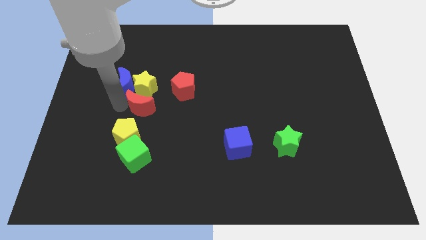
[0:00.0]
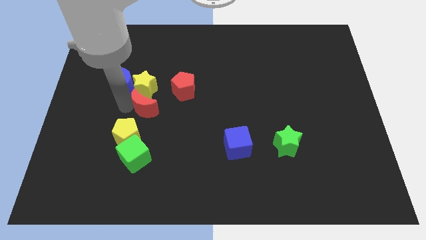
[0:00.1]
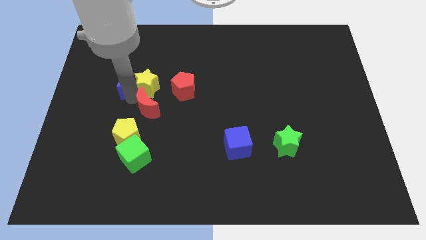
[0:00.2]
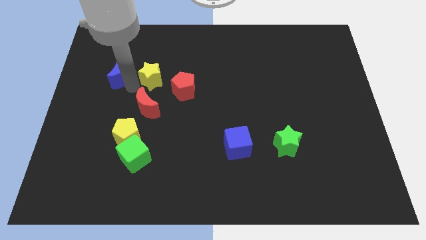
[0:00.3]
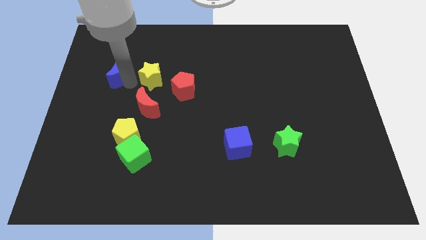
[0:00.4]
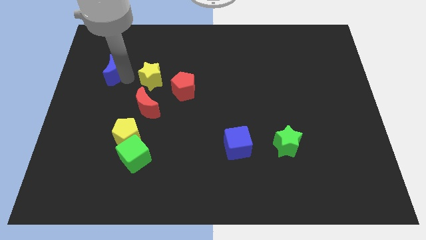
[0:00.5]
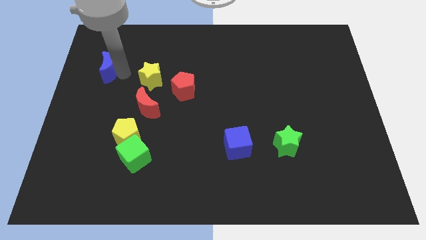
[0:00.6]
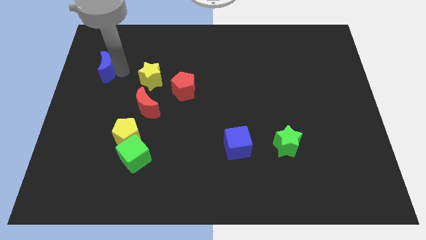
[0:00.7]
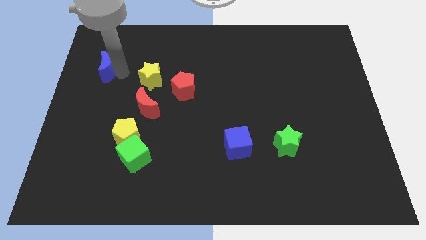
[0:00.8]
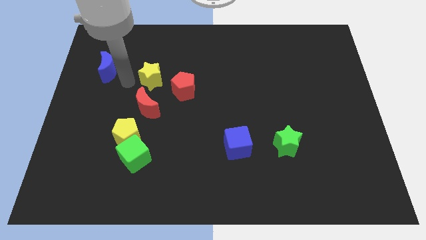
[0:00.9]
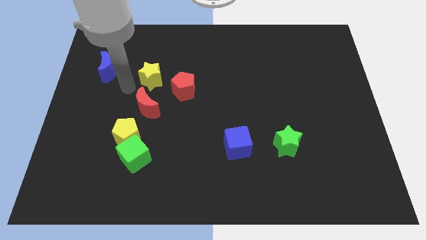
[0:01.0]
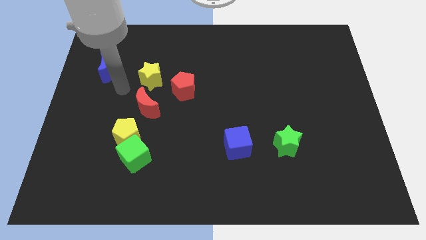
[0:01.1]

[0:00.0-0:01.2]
separate yellow star and red moon

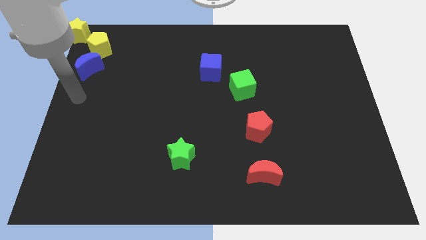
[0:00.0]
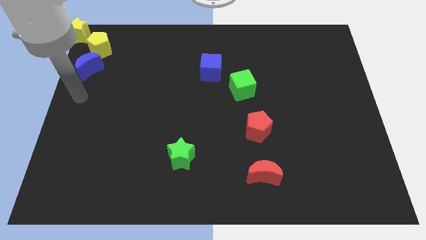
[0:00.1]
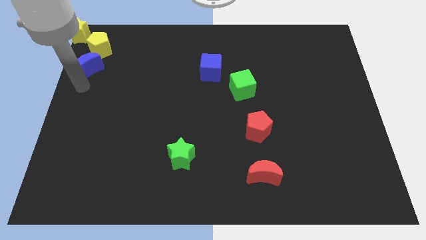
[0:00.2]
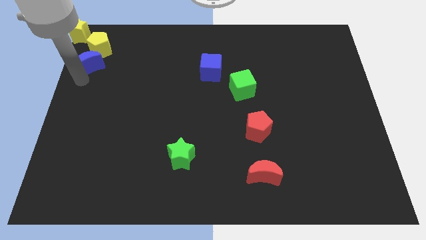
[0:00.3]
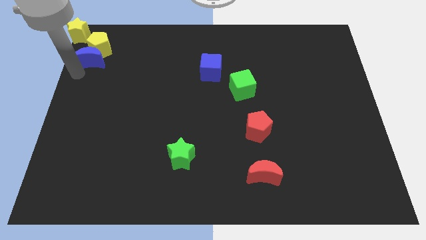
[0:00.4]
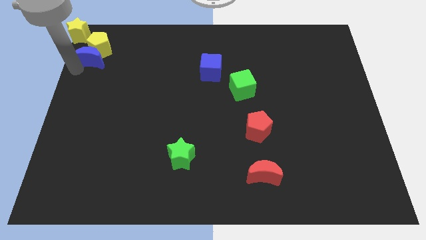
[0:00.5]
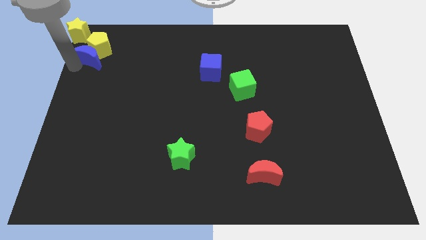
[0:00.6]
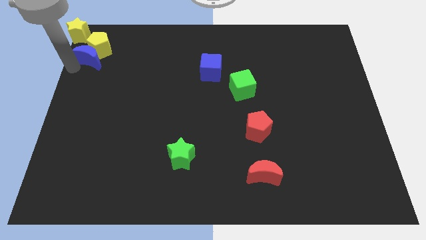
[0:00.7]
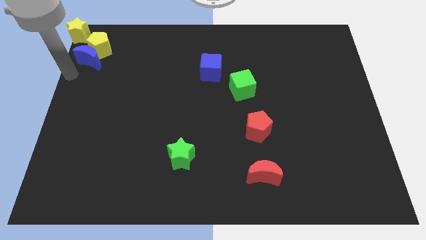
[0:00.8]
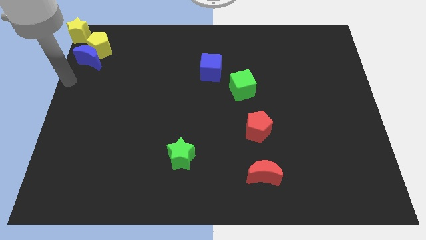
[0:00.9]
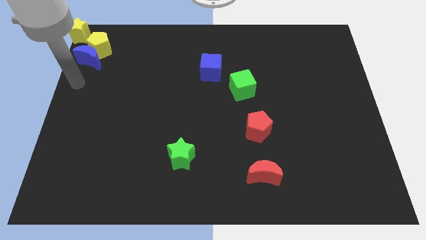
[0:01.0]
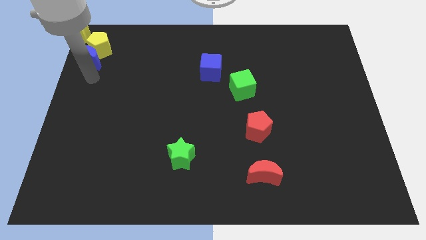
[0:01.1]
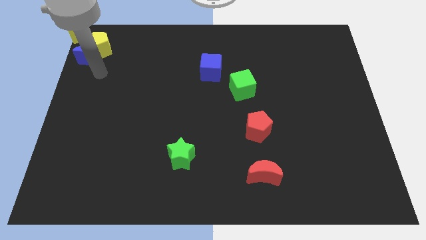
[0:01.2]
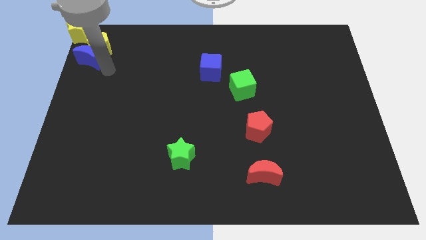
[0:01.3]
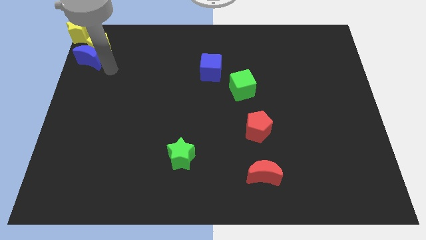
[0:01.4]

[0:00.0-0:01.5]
adjust blue crescent on left

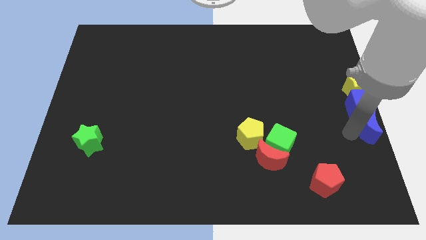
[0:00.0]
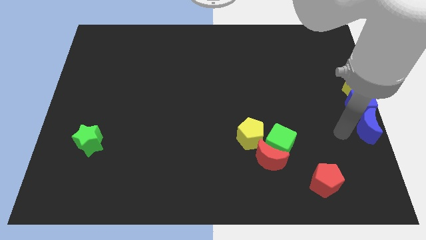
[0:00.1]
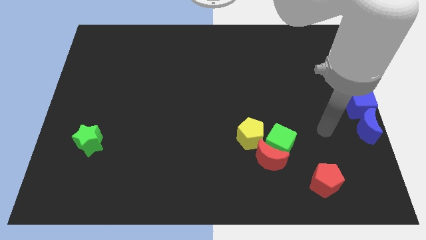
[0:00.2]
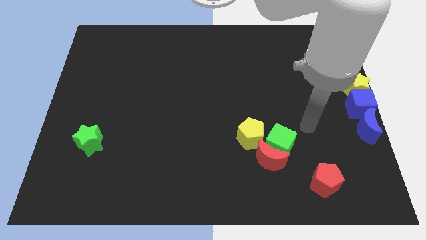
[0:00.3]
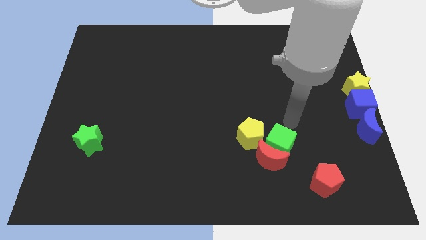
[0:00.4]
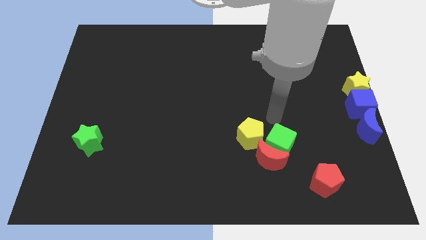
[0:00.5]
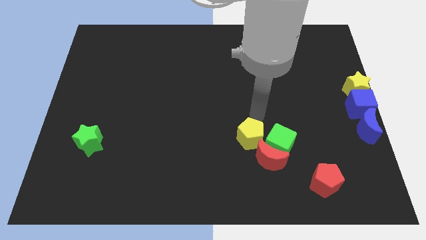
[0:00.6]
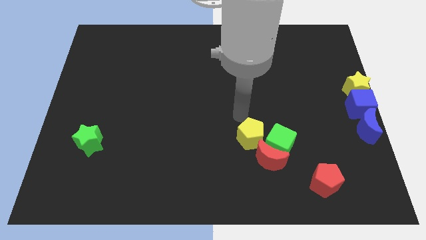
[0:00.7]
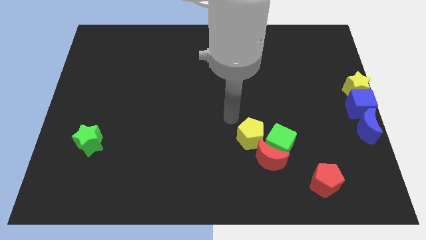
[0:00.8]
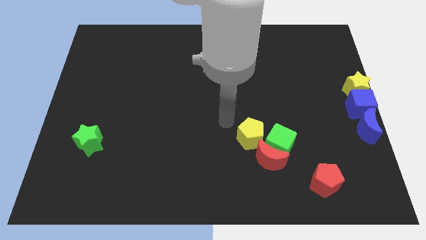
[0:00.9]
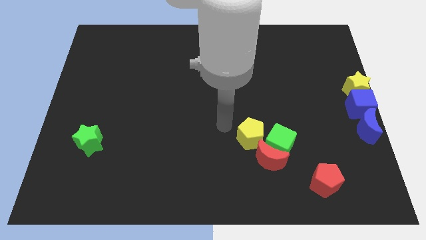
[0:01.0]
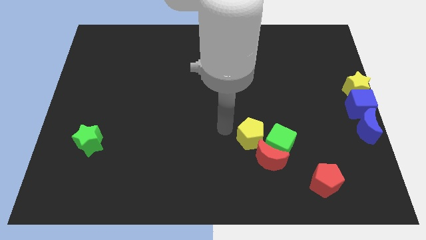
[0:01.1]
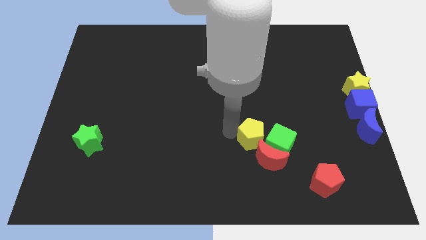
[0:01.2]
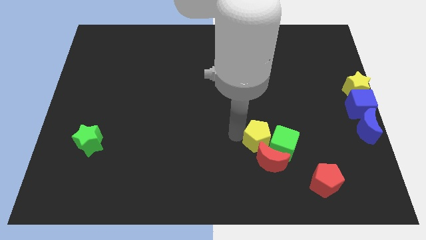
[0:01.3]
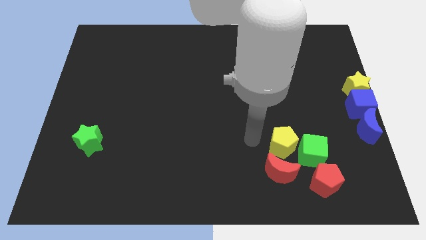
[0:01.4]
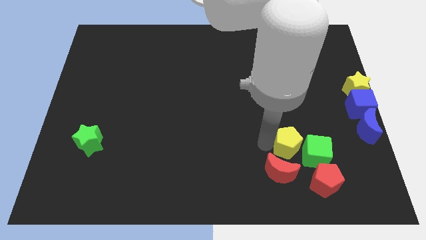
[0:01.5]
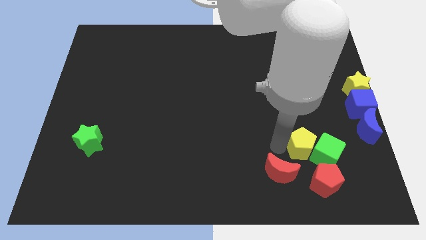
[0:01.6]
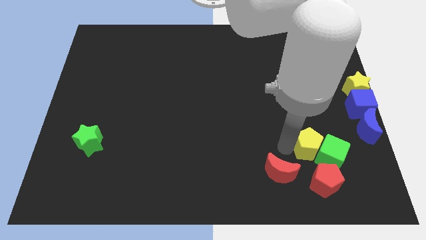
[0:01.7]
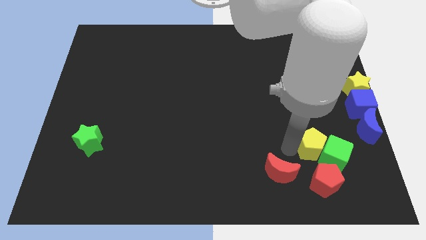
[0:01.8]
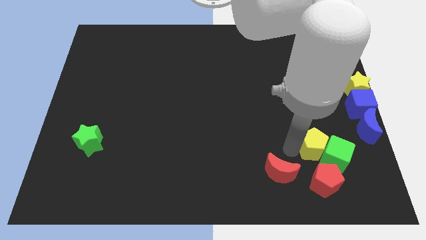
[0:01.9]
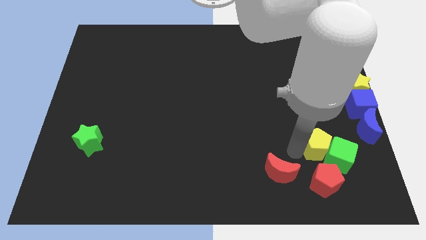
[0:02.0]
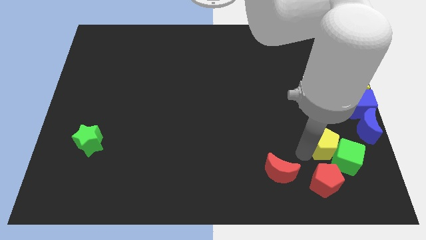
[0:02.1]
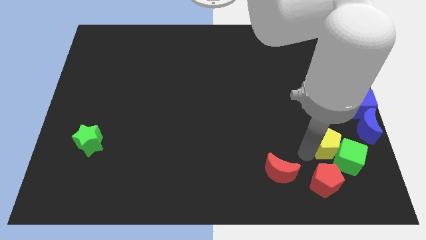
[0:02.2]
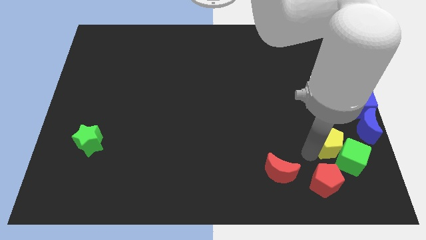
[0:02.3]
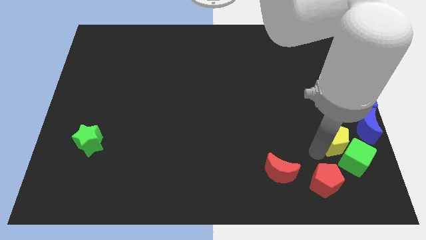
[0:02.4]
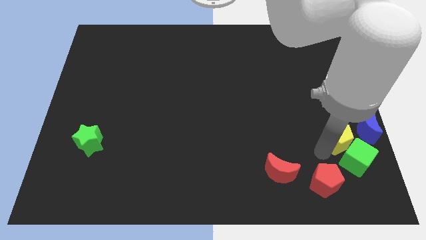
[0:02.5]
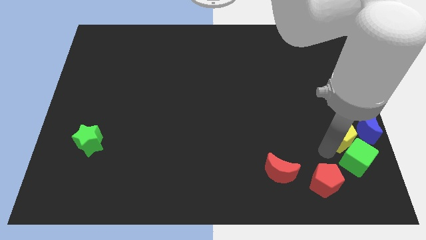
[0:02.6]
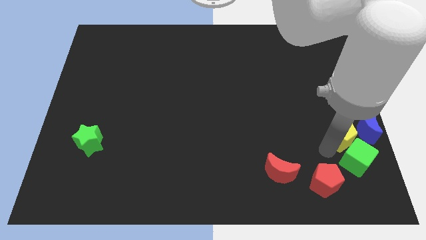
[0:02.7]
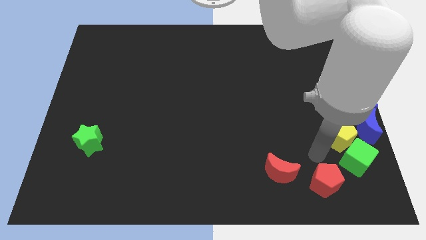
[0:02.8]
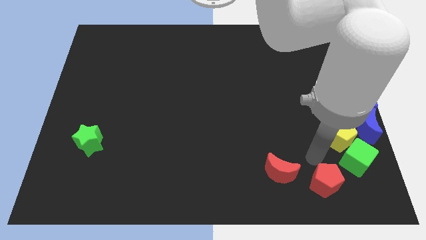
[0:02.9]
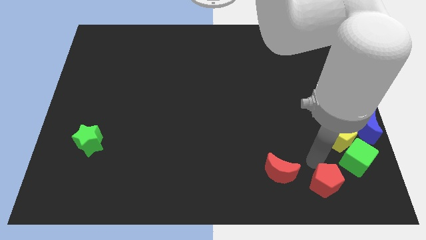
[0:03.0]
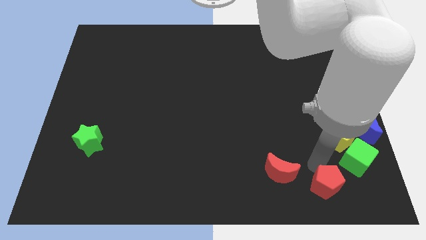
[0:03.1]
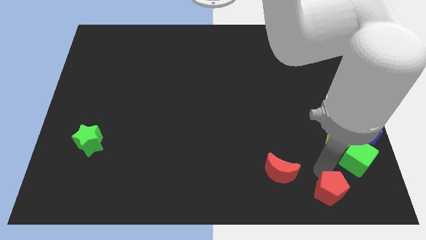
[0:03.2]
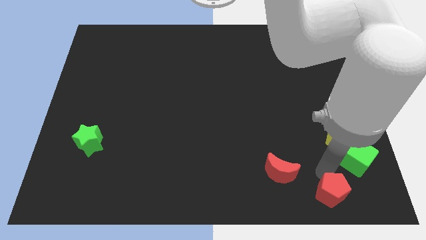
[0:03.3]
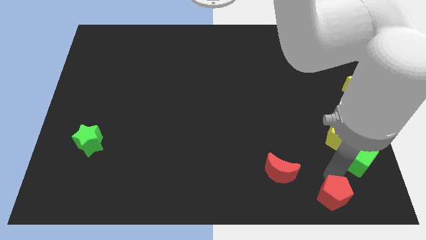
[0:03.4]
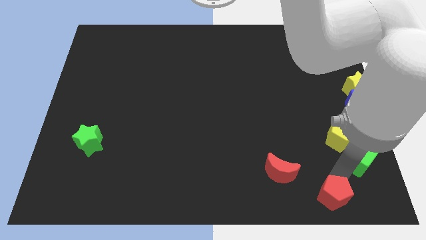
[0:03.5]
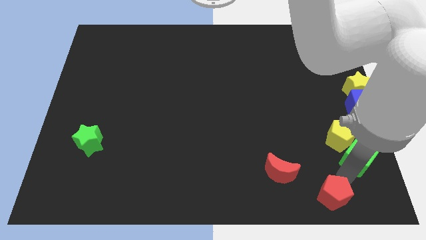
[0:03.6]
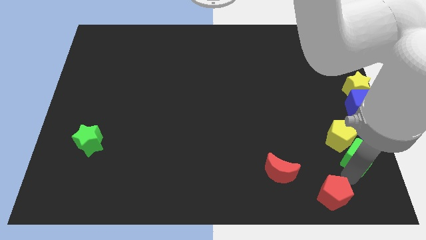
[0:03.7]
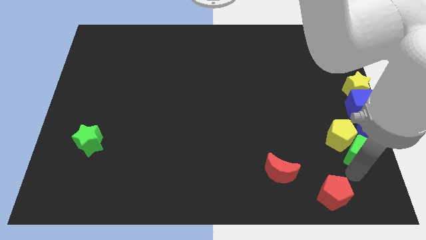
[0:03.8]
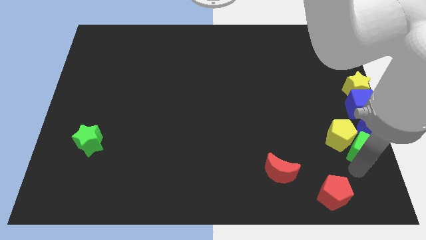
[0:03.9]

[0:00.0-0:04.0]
push the green cube with the yellow pentagon towards the bottom right of the board

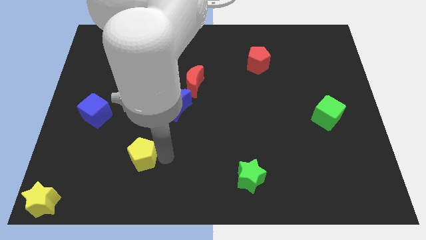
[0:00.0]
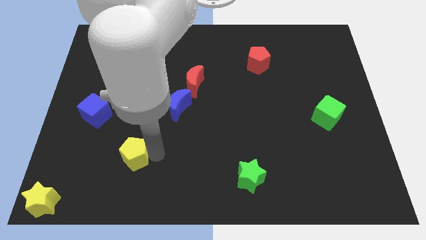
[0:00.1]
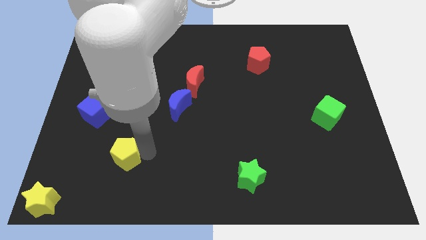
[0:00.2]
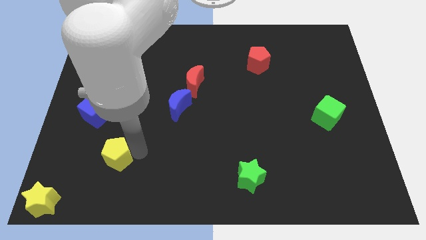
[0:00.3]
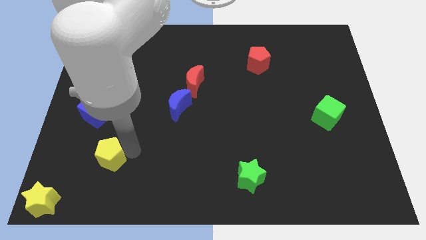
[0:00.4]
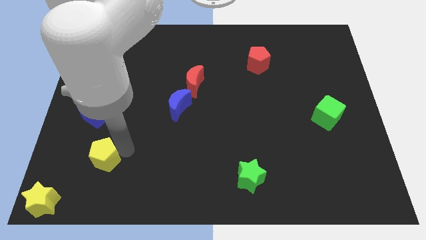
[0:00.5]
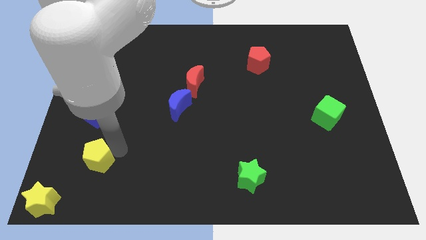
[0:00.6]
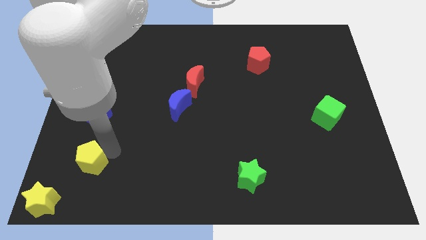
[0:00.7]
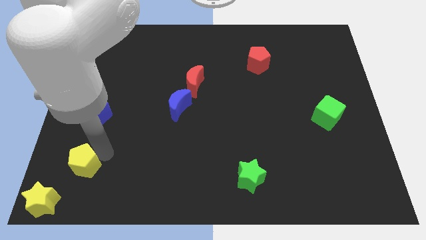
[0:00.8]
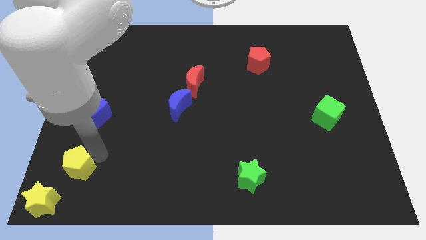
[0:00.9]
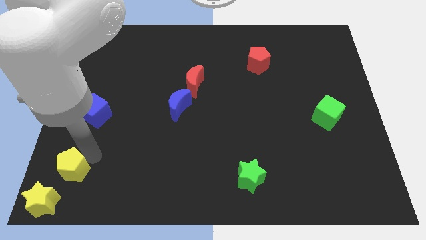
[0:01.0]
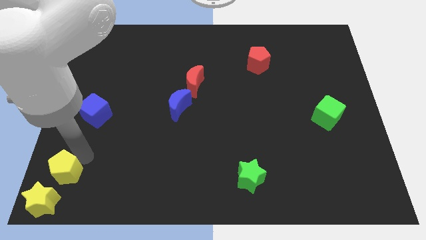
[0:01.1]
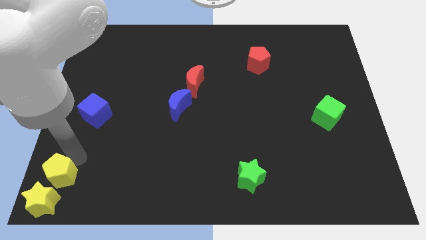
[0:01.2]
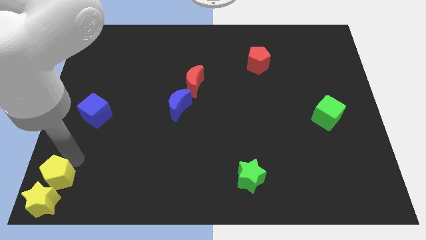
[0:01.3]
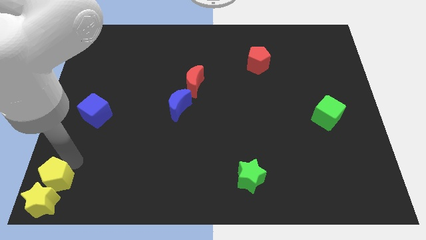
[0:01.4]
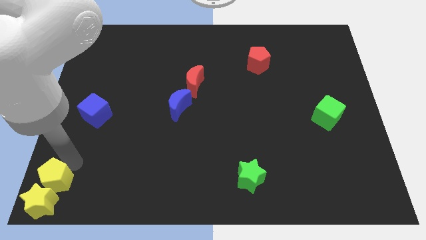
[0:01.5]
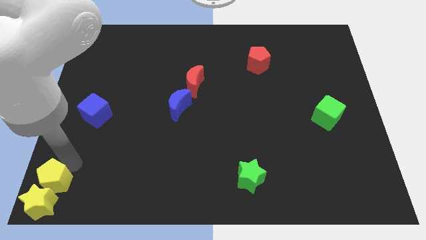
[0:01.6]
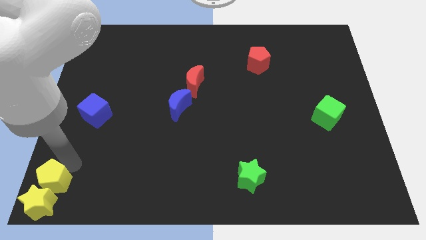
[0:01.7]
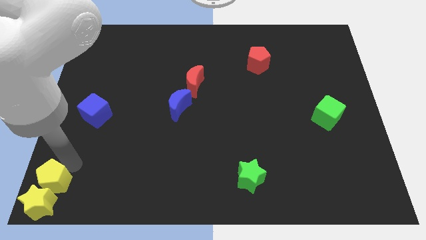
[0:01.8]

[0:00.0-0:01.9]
push the yellow pentagon into the yellow star

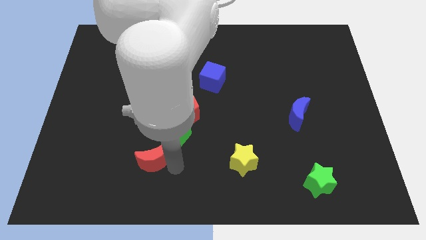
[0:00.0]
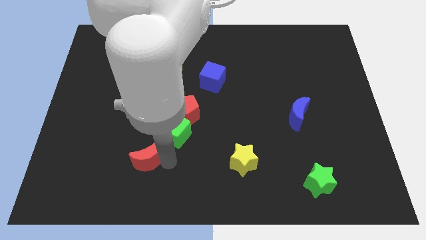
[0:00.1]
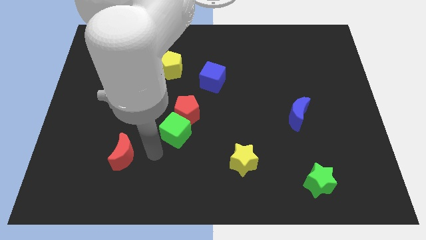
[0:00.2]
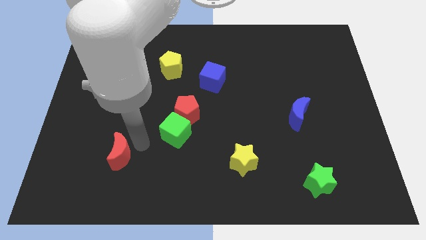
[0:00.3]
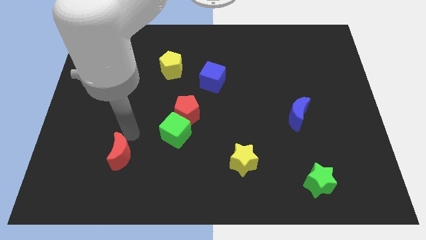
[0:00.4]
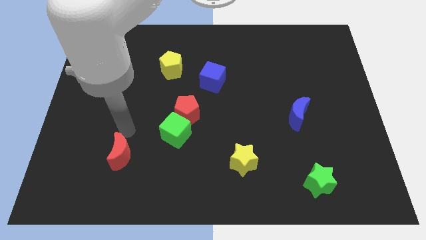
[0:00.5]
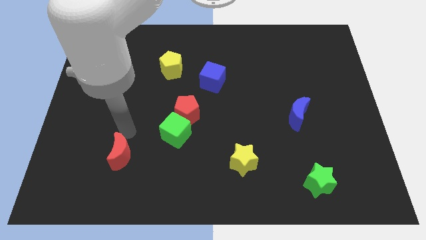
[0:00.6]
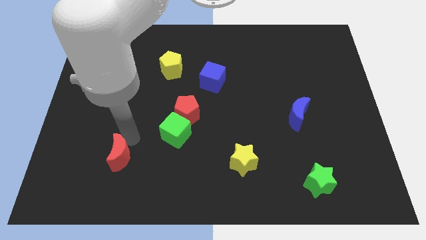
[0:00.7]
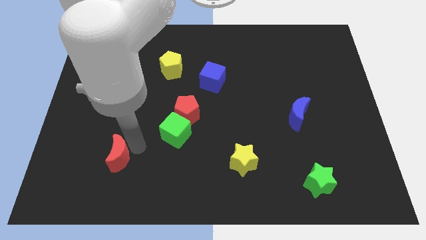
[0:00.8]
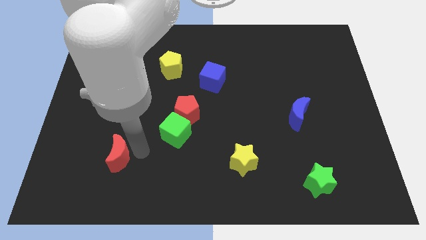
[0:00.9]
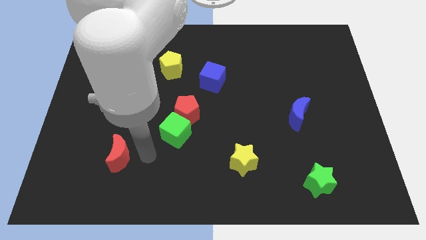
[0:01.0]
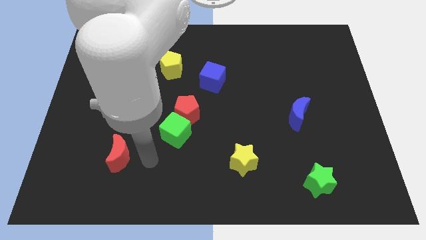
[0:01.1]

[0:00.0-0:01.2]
place the red moon diagonally bottom left to the green cube
